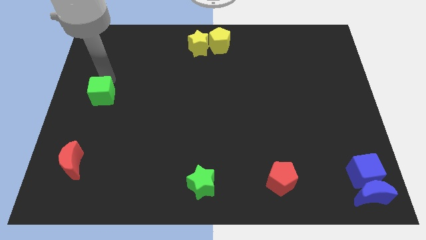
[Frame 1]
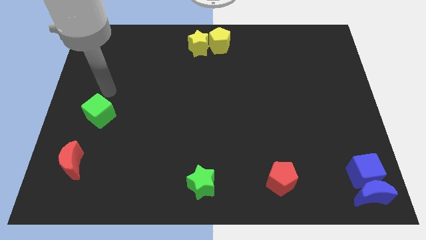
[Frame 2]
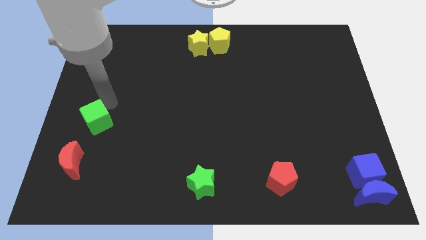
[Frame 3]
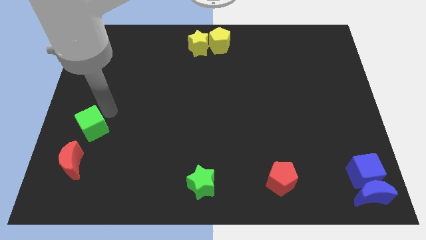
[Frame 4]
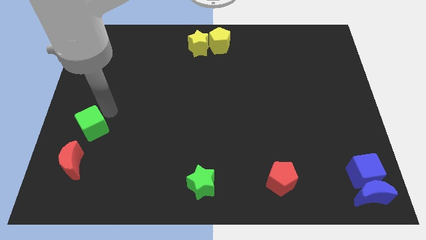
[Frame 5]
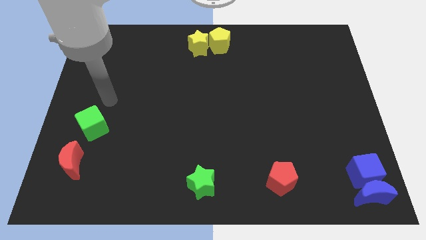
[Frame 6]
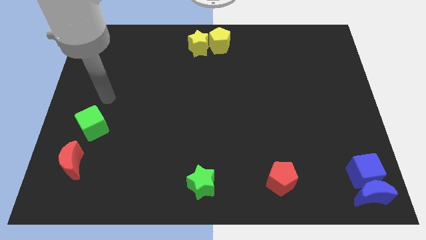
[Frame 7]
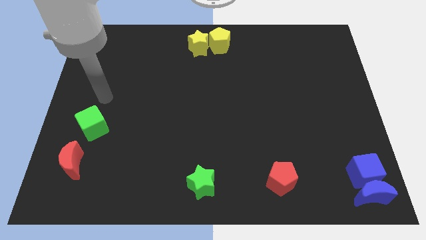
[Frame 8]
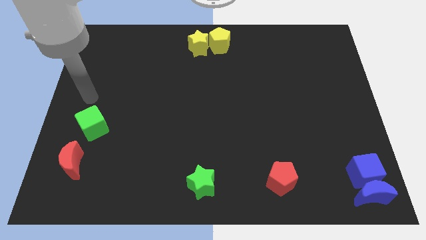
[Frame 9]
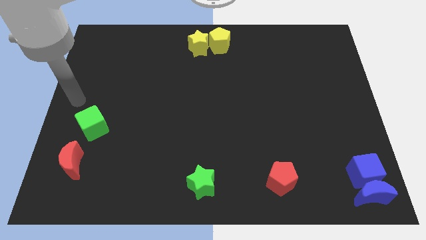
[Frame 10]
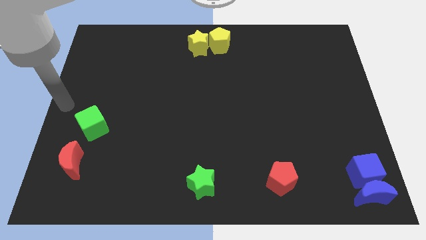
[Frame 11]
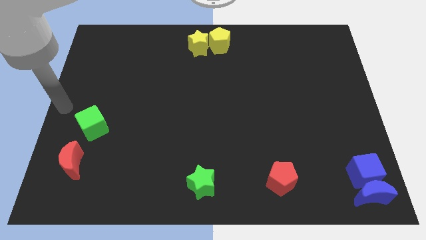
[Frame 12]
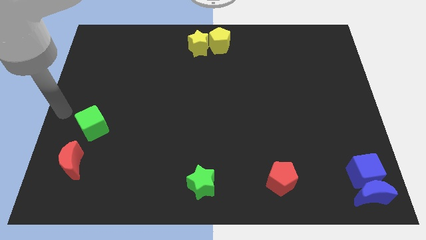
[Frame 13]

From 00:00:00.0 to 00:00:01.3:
move the green cube above the red moon

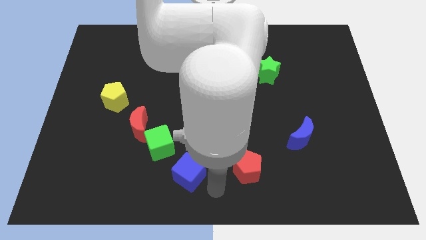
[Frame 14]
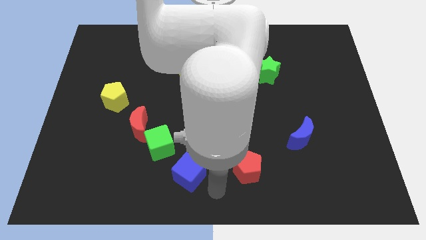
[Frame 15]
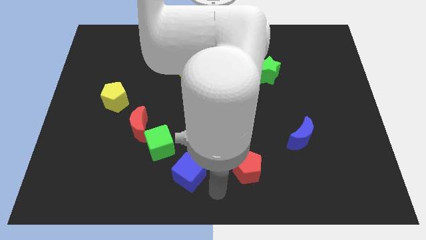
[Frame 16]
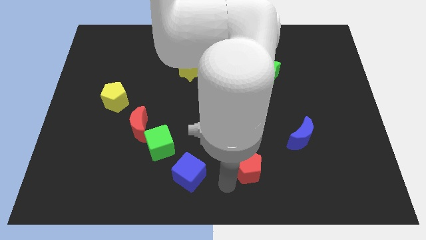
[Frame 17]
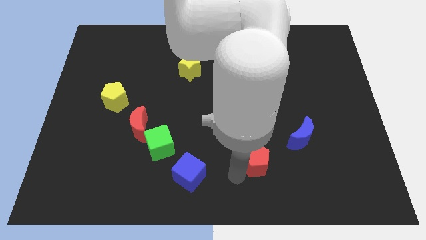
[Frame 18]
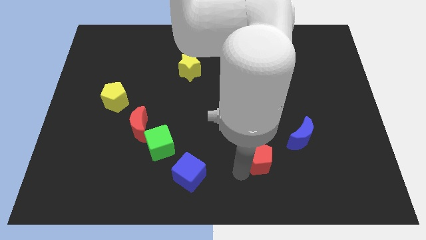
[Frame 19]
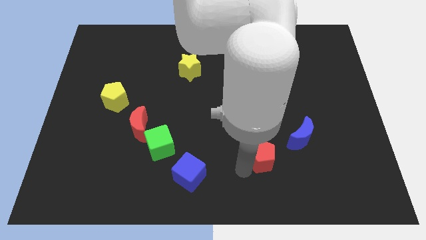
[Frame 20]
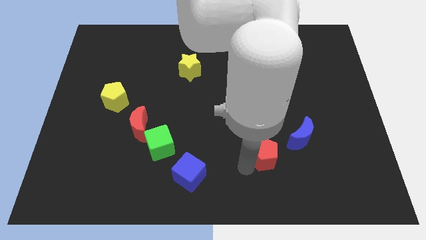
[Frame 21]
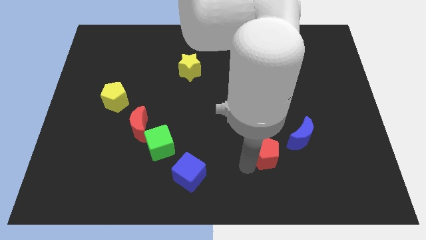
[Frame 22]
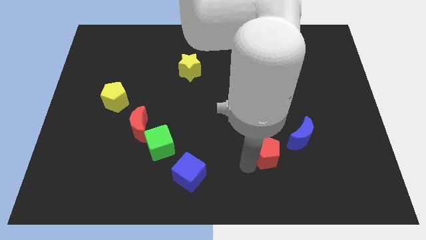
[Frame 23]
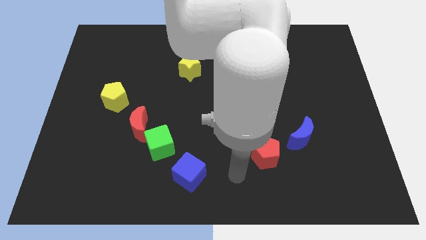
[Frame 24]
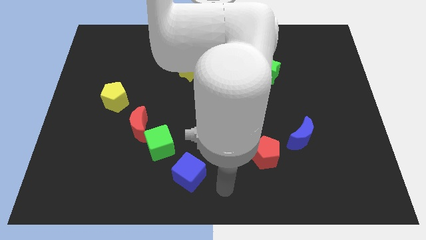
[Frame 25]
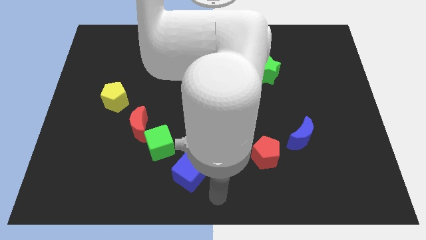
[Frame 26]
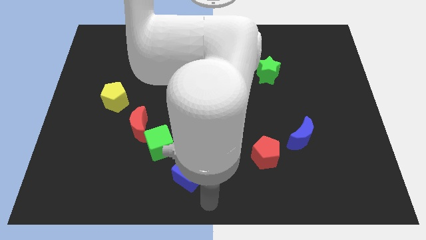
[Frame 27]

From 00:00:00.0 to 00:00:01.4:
move the red pentagon close to the blue moon

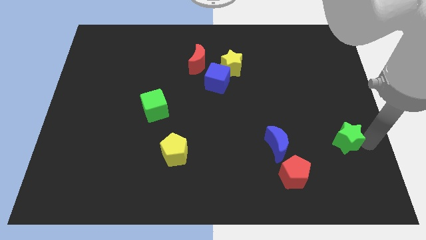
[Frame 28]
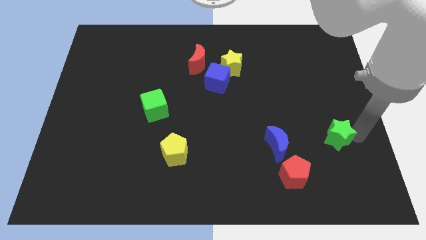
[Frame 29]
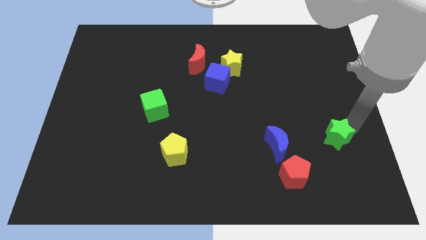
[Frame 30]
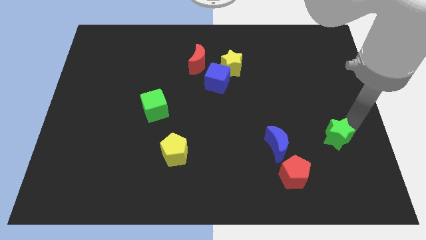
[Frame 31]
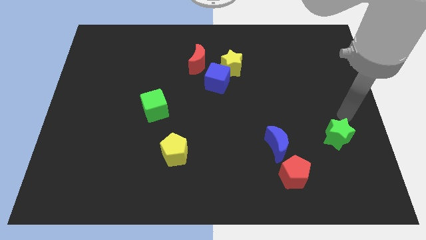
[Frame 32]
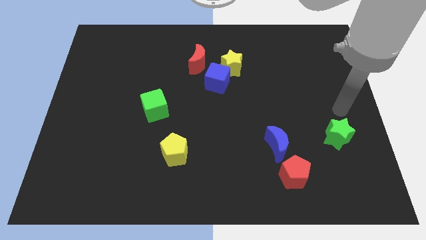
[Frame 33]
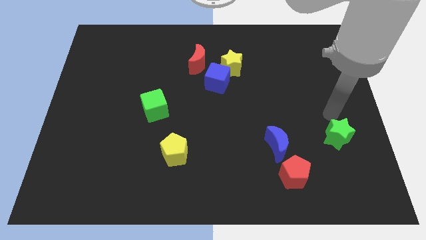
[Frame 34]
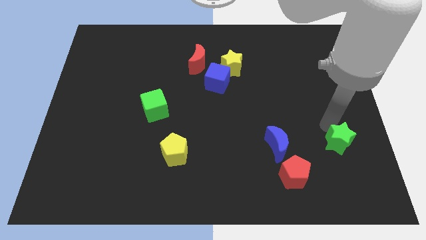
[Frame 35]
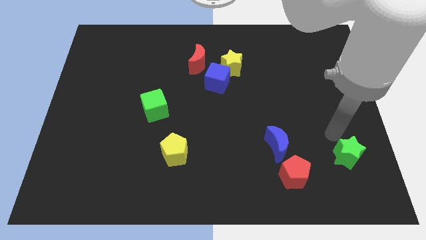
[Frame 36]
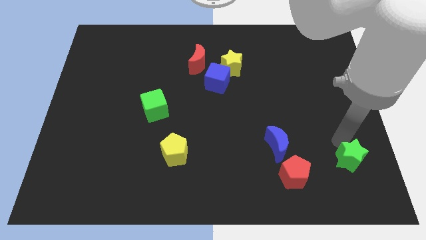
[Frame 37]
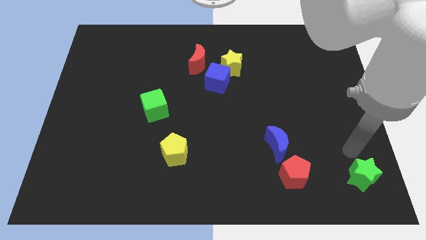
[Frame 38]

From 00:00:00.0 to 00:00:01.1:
move the green star to the right of the red pentagon

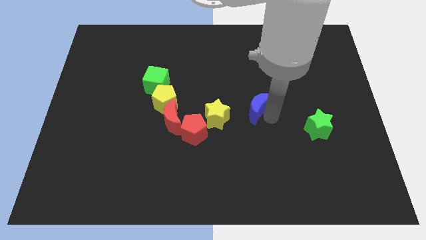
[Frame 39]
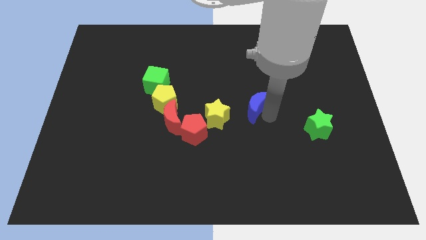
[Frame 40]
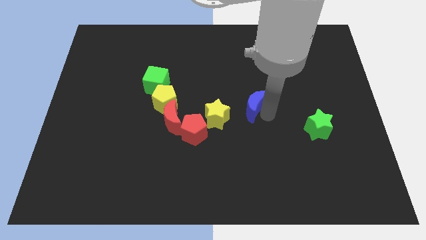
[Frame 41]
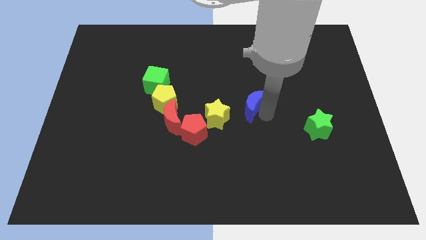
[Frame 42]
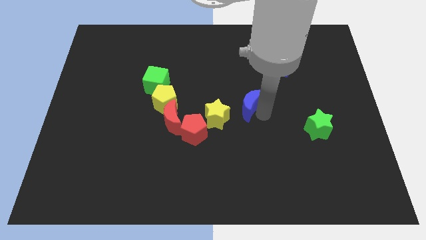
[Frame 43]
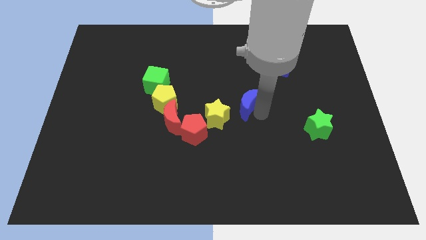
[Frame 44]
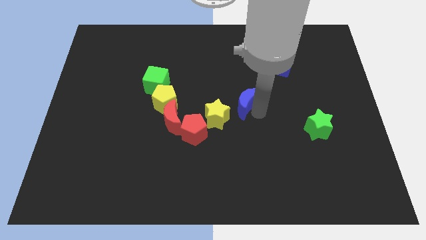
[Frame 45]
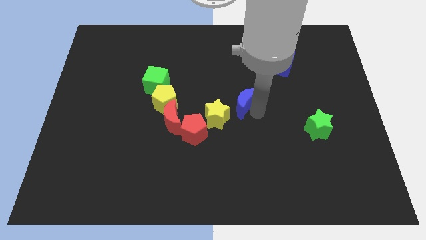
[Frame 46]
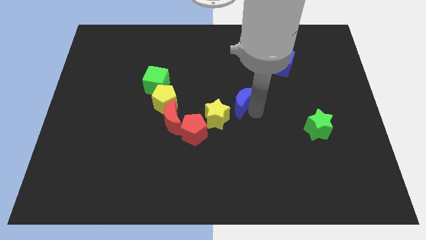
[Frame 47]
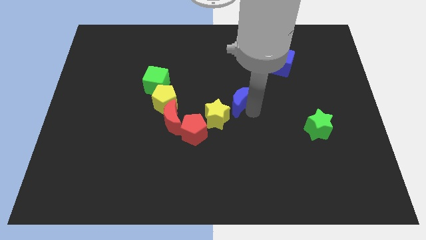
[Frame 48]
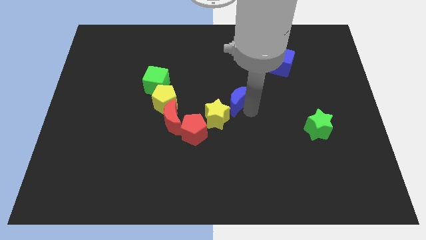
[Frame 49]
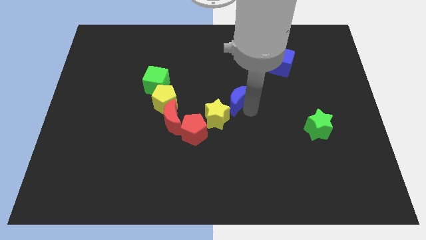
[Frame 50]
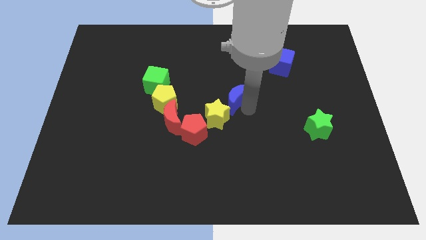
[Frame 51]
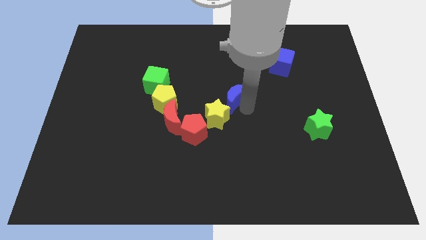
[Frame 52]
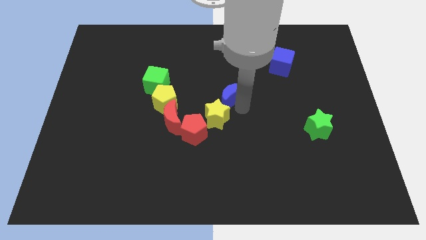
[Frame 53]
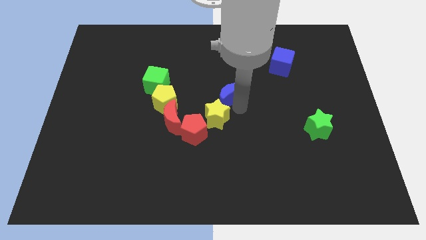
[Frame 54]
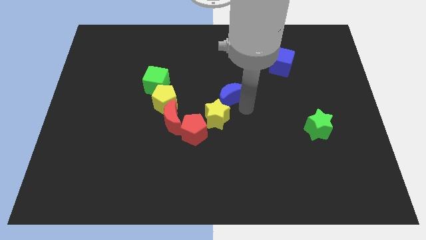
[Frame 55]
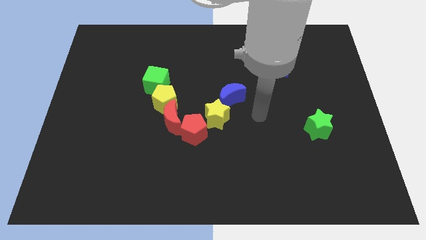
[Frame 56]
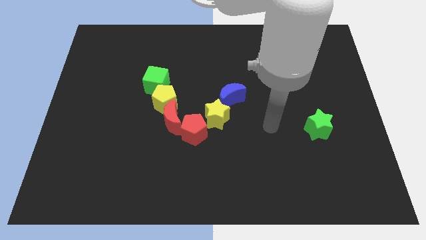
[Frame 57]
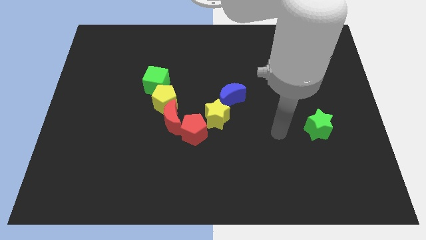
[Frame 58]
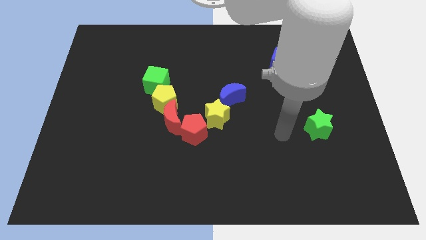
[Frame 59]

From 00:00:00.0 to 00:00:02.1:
move the blue crescent above the yellow star

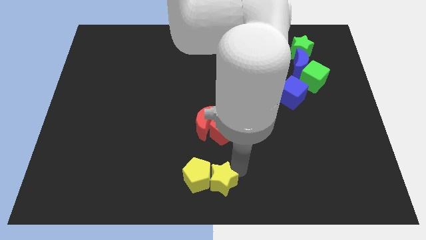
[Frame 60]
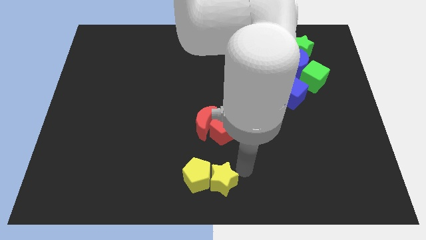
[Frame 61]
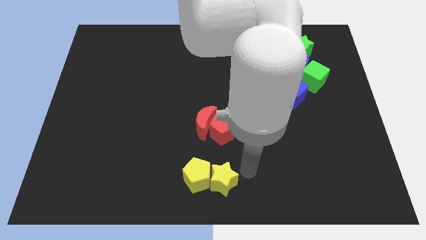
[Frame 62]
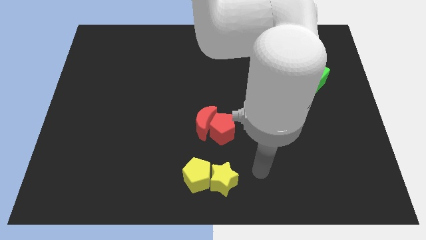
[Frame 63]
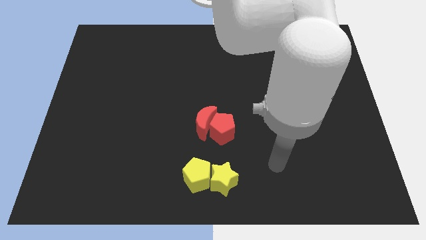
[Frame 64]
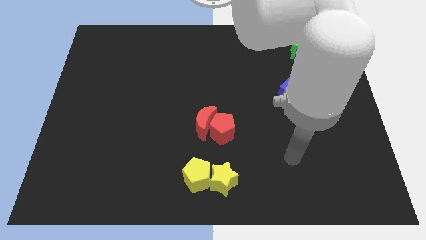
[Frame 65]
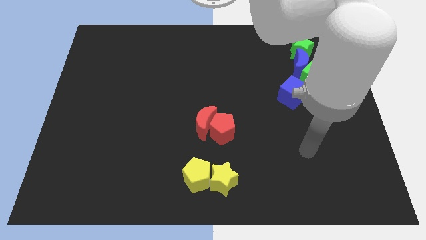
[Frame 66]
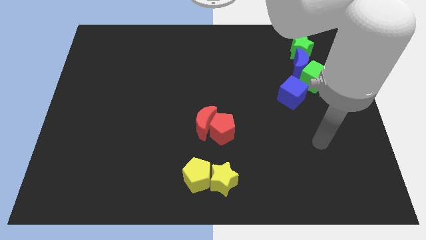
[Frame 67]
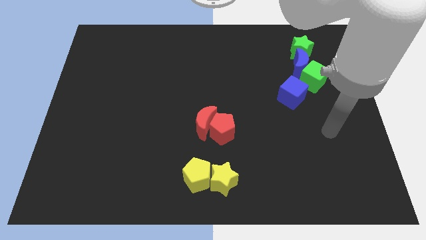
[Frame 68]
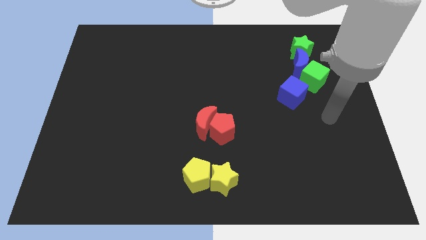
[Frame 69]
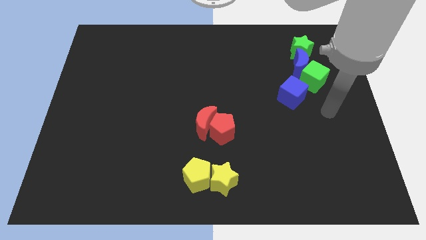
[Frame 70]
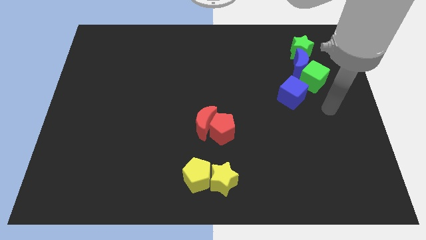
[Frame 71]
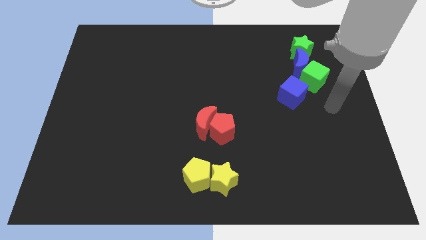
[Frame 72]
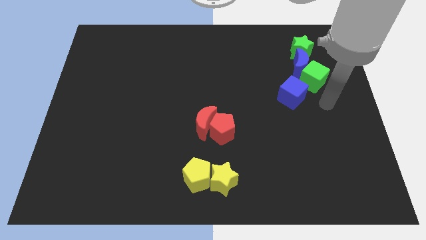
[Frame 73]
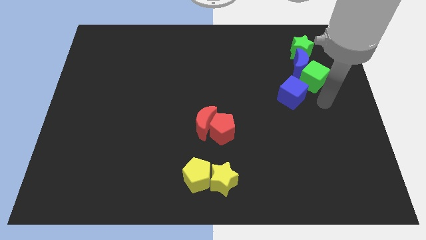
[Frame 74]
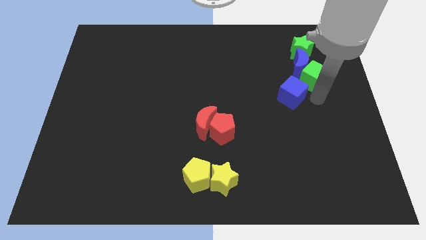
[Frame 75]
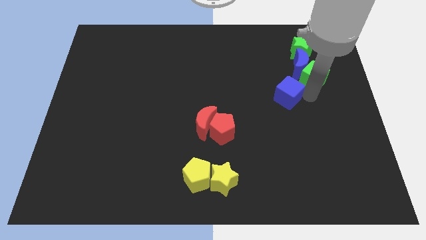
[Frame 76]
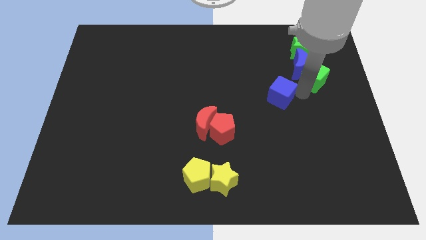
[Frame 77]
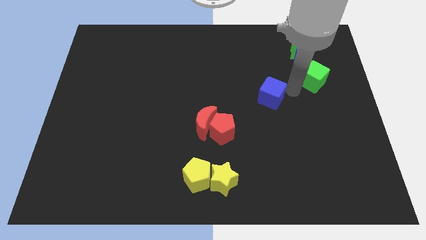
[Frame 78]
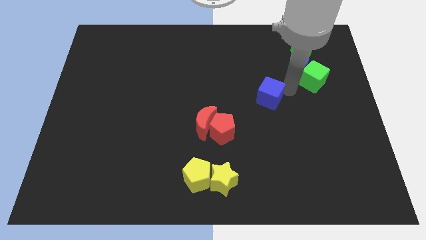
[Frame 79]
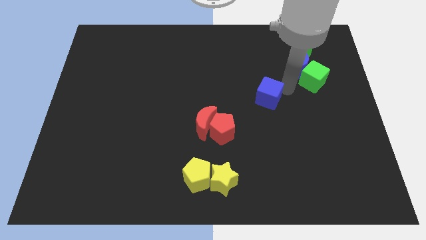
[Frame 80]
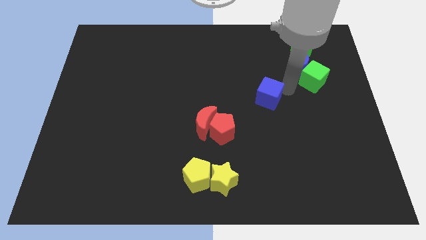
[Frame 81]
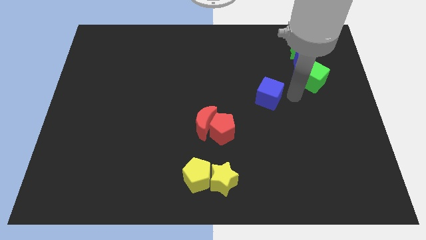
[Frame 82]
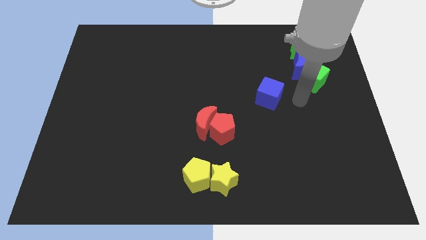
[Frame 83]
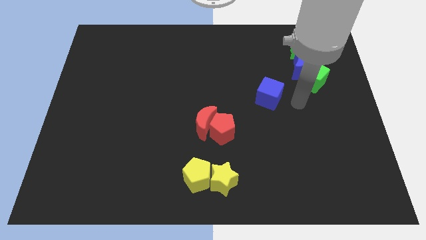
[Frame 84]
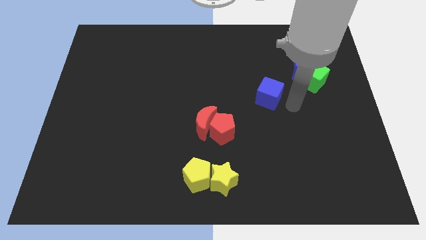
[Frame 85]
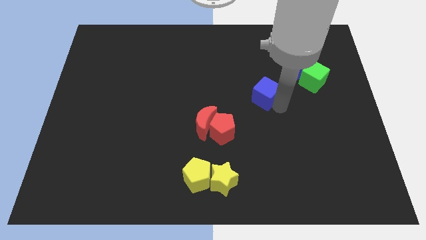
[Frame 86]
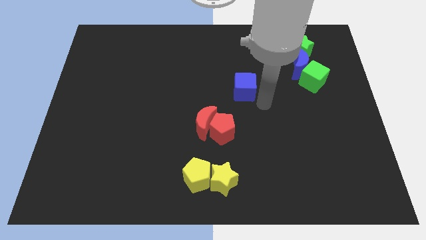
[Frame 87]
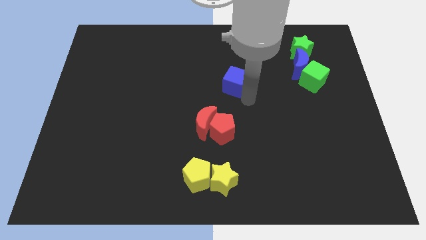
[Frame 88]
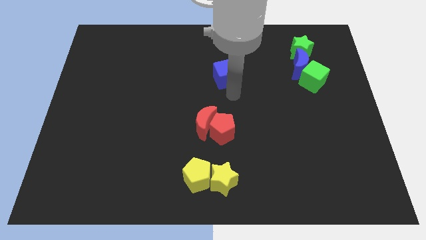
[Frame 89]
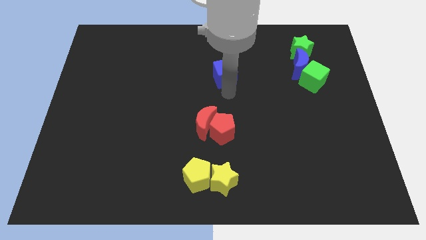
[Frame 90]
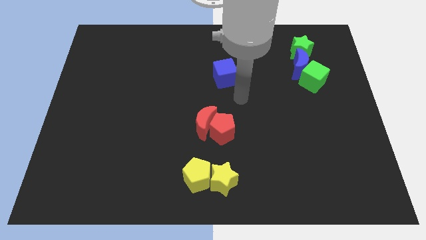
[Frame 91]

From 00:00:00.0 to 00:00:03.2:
separate the blue cube from the green cube
